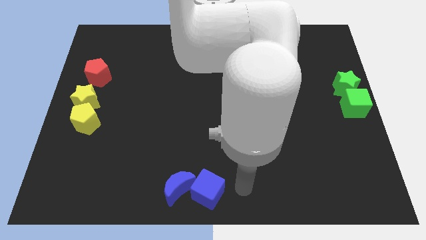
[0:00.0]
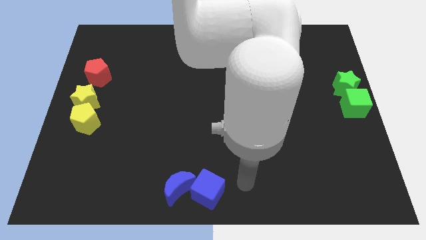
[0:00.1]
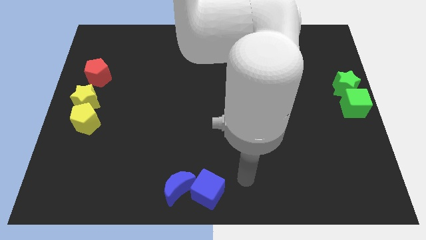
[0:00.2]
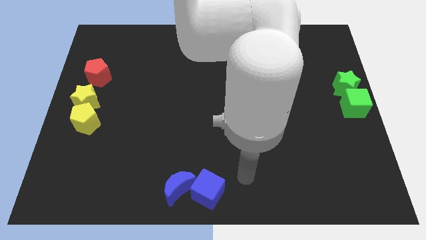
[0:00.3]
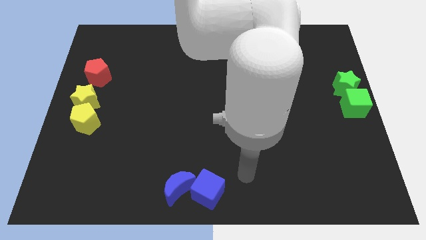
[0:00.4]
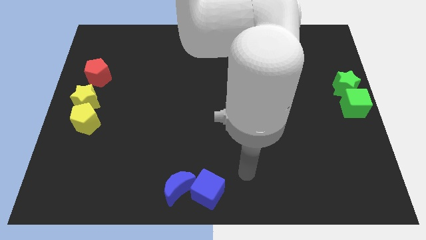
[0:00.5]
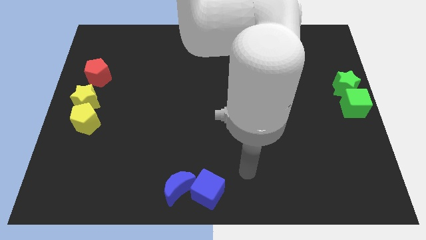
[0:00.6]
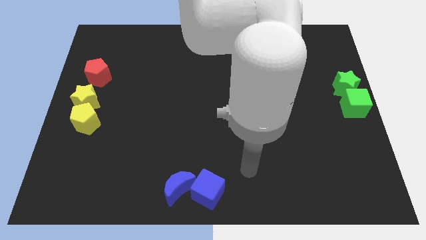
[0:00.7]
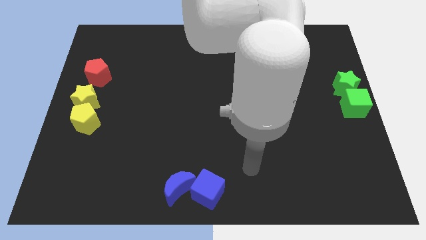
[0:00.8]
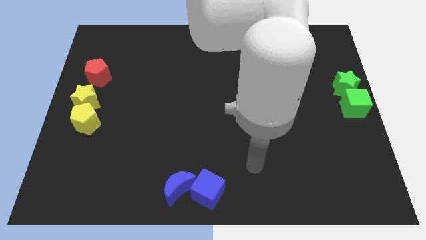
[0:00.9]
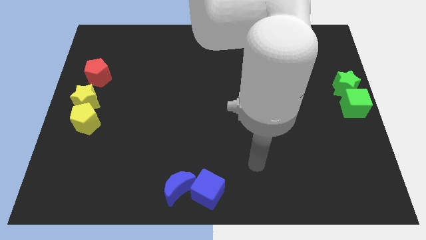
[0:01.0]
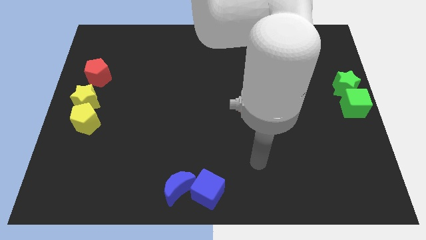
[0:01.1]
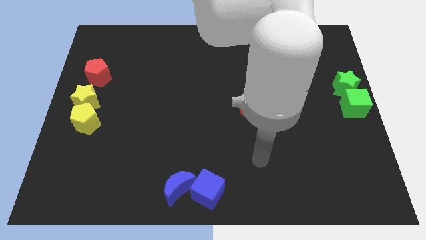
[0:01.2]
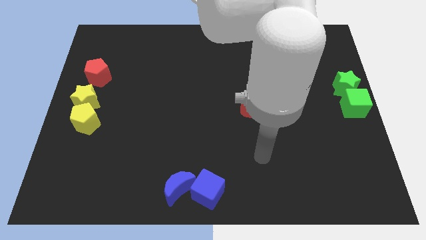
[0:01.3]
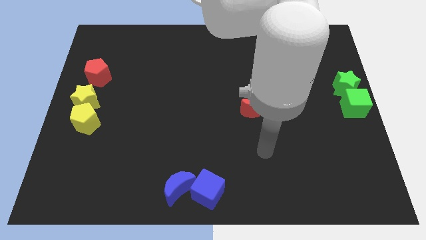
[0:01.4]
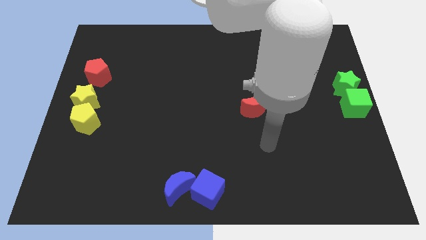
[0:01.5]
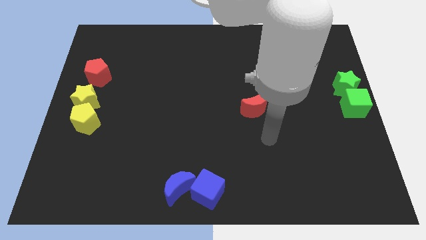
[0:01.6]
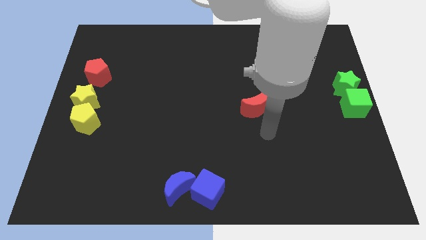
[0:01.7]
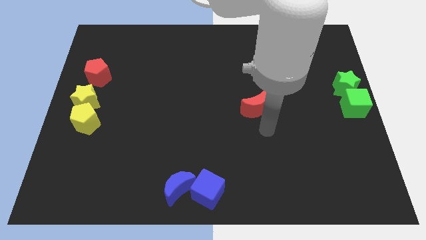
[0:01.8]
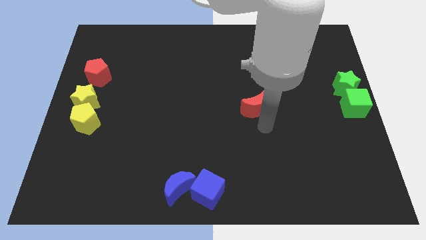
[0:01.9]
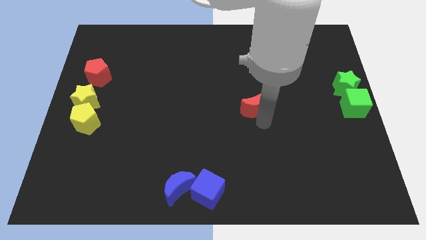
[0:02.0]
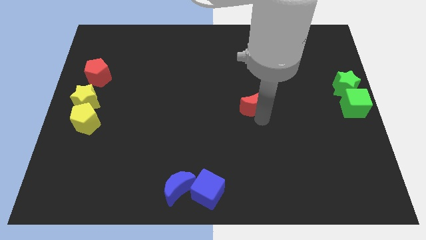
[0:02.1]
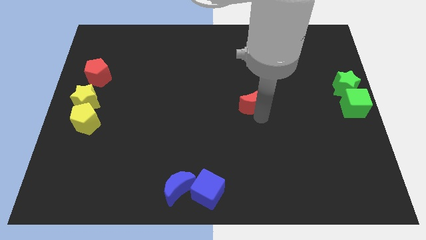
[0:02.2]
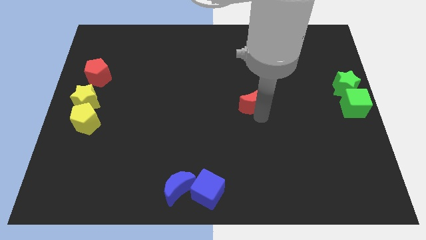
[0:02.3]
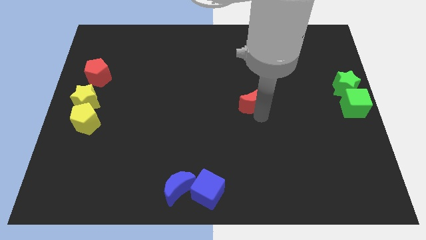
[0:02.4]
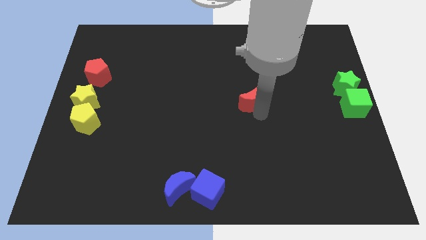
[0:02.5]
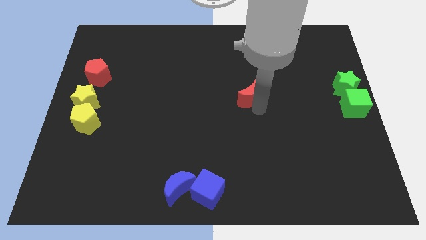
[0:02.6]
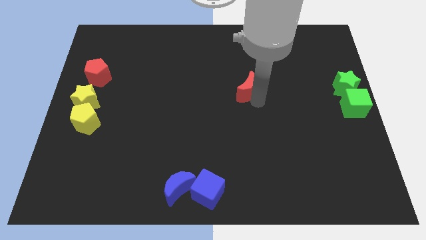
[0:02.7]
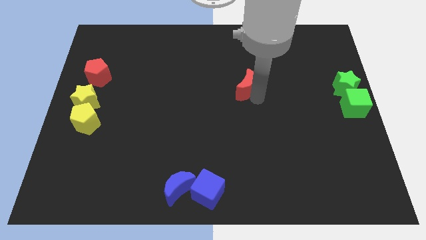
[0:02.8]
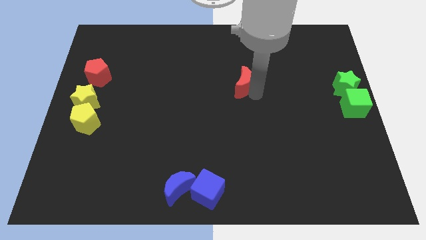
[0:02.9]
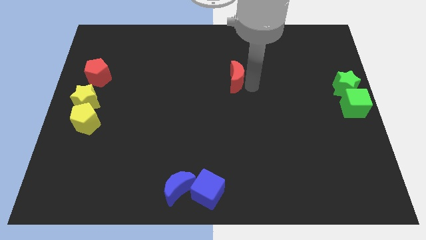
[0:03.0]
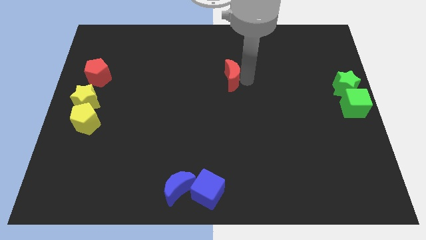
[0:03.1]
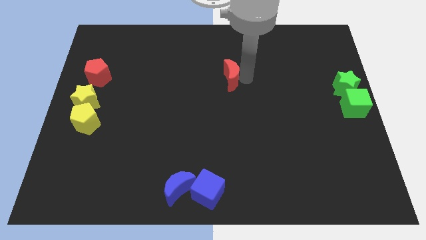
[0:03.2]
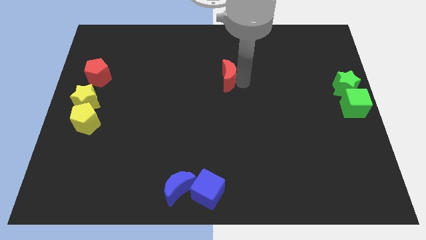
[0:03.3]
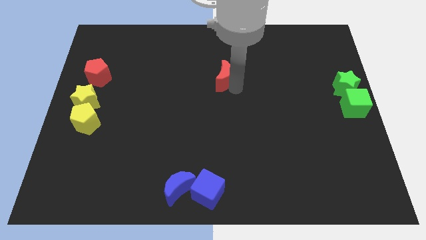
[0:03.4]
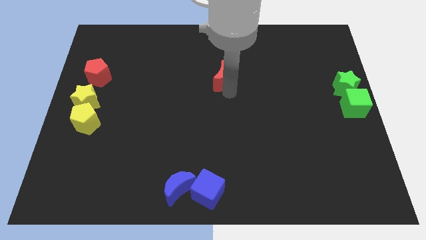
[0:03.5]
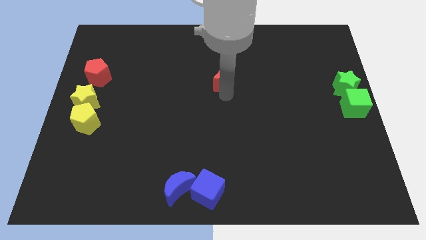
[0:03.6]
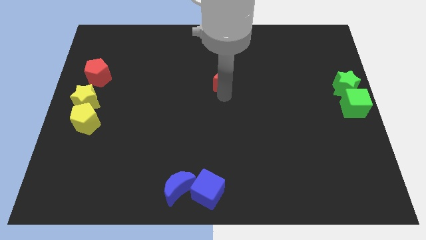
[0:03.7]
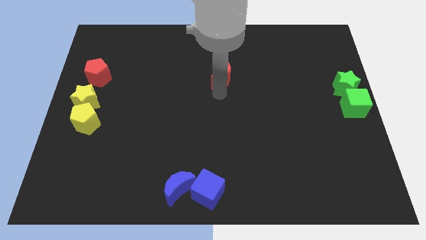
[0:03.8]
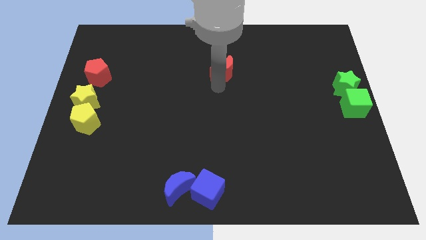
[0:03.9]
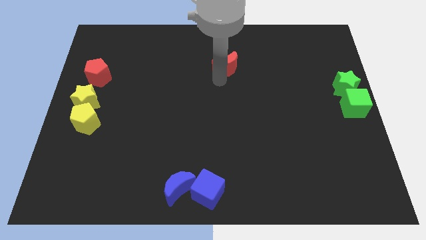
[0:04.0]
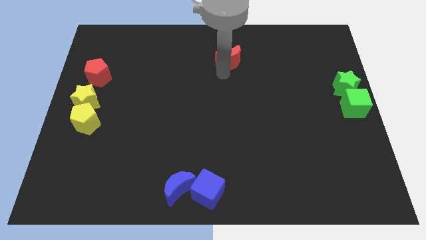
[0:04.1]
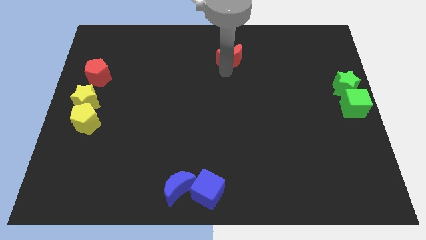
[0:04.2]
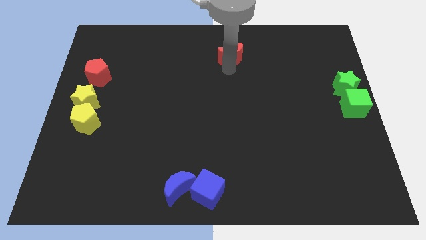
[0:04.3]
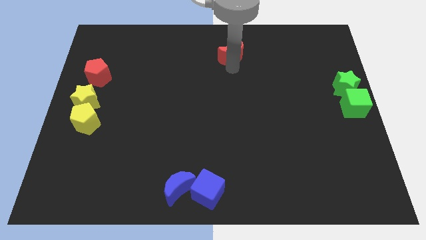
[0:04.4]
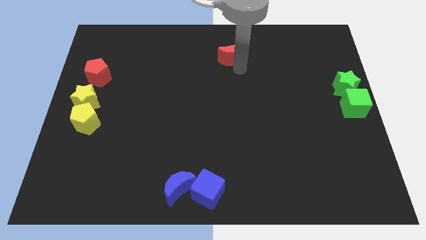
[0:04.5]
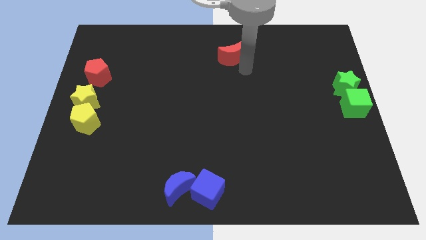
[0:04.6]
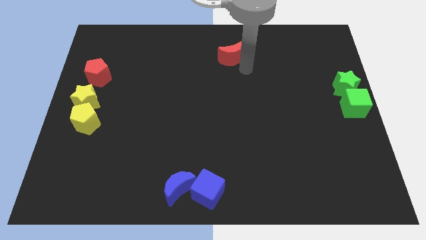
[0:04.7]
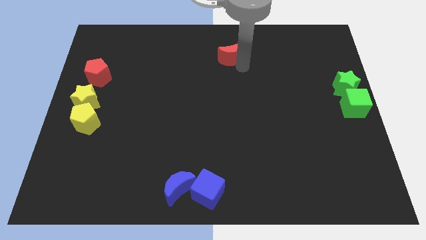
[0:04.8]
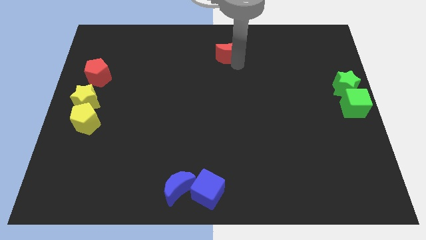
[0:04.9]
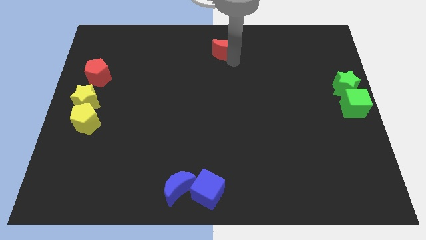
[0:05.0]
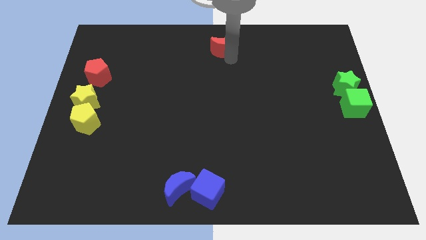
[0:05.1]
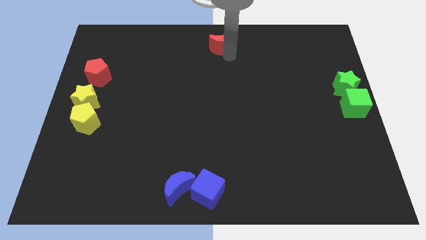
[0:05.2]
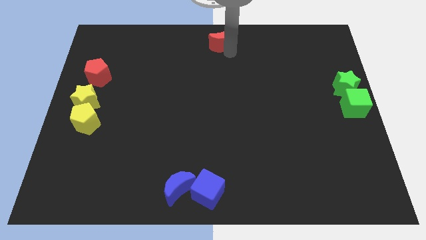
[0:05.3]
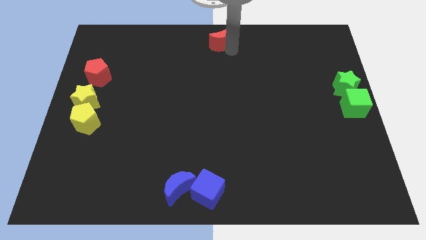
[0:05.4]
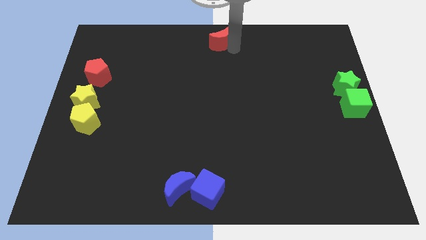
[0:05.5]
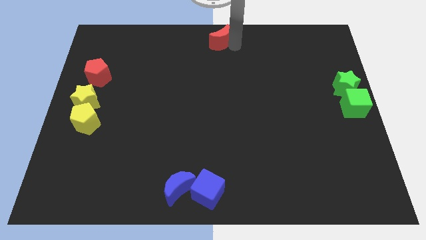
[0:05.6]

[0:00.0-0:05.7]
move the red crescent to the top center of the board

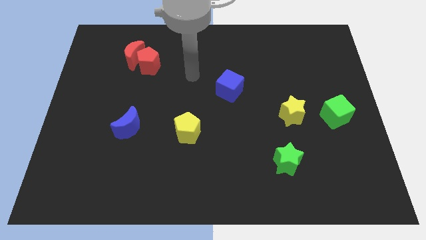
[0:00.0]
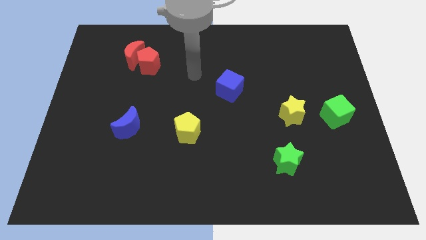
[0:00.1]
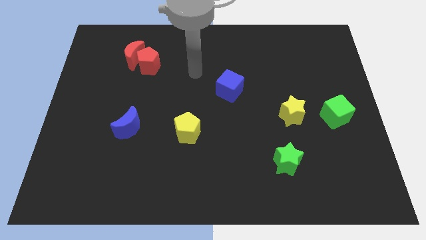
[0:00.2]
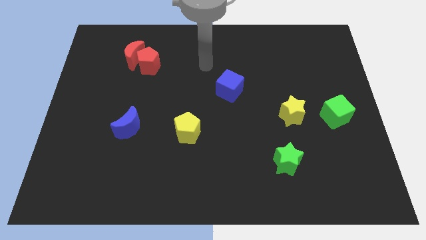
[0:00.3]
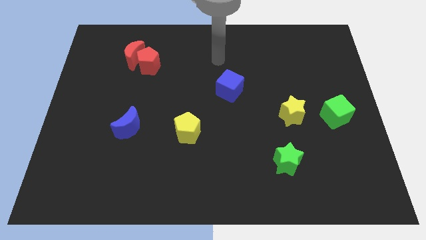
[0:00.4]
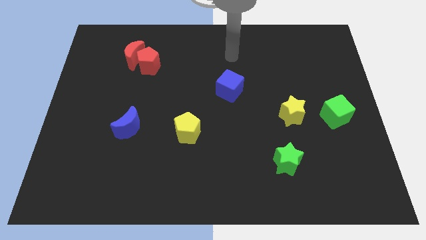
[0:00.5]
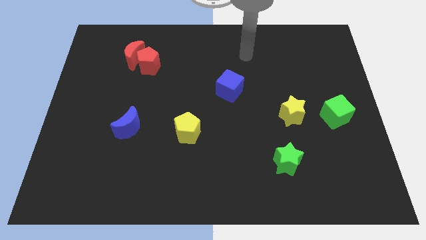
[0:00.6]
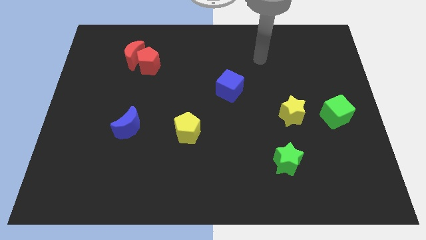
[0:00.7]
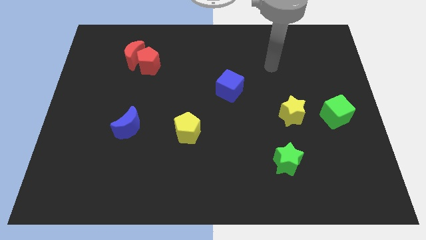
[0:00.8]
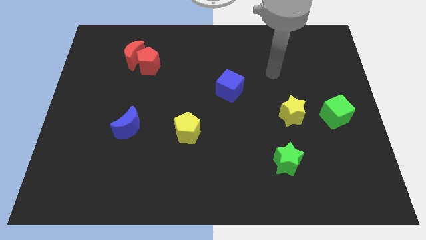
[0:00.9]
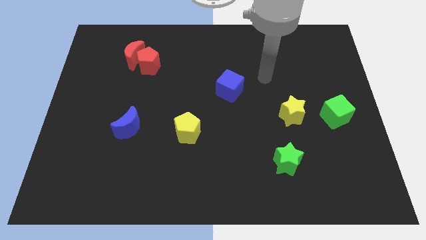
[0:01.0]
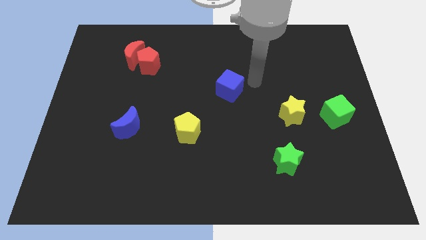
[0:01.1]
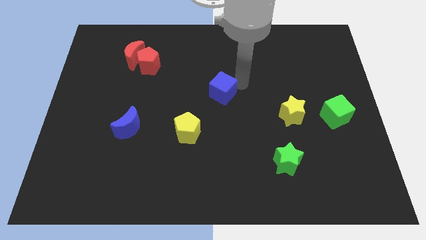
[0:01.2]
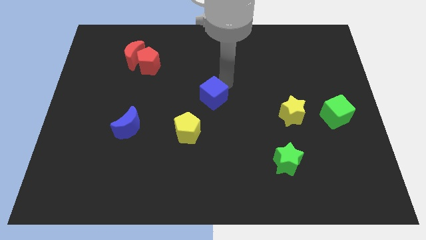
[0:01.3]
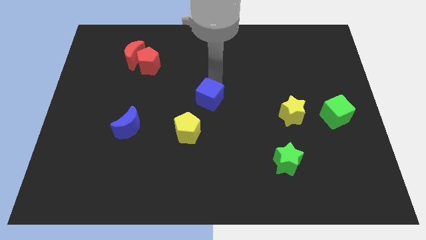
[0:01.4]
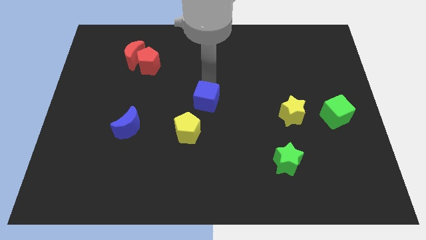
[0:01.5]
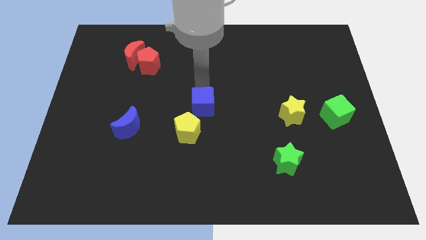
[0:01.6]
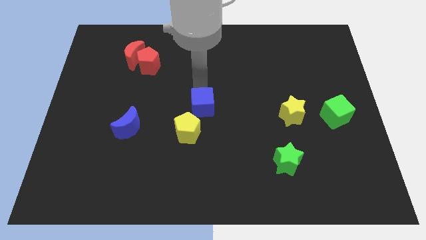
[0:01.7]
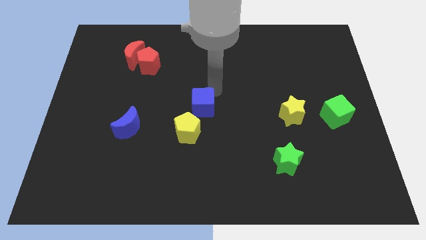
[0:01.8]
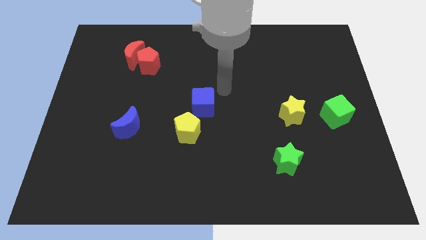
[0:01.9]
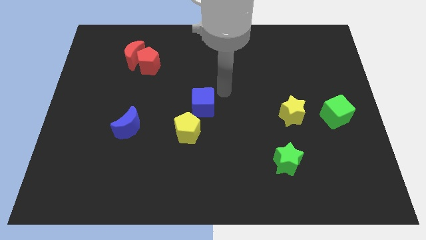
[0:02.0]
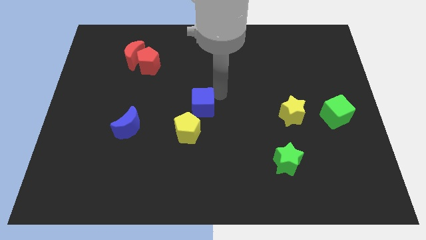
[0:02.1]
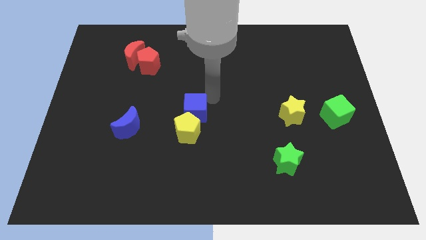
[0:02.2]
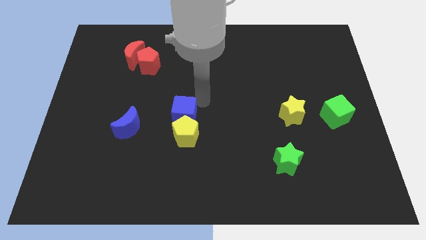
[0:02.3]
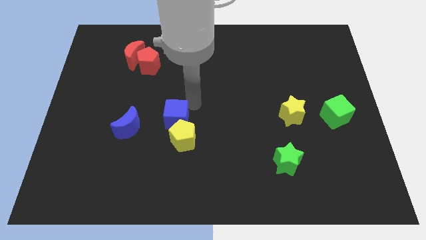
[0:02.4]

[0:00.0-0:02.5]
place the blue cube on top of the yellow pentagon

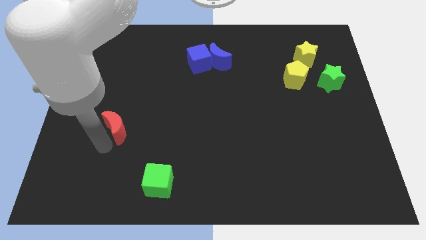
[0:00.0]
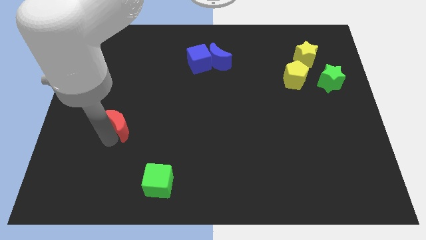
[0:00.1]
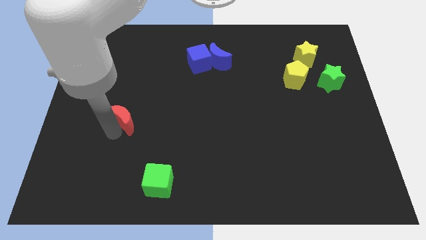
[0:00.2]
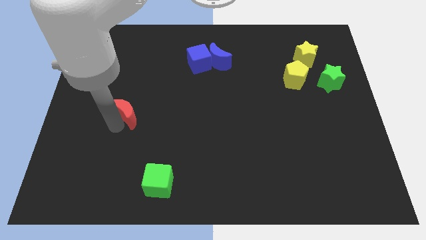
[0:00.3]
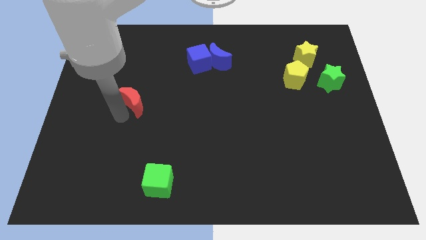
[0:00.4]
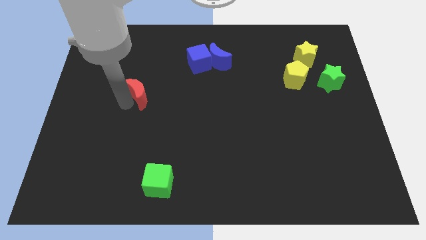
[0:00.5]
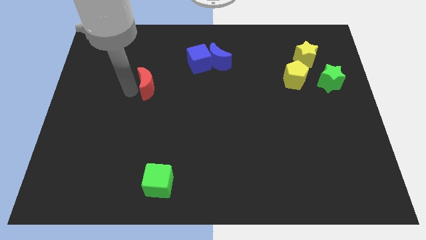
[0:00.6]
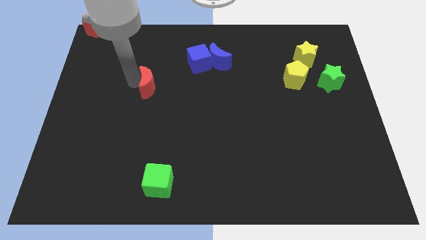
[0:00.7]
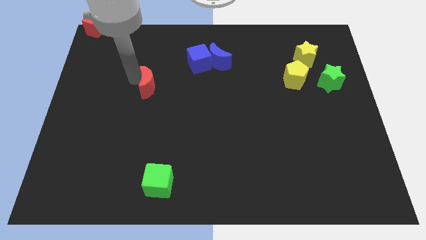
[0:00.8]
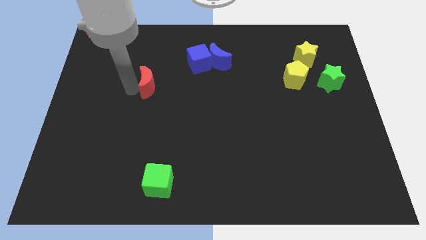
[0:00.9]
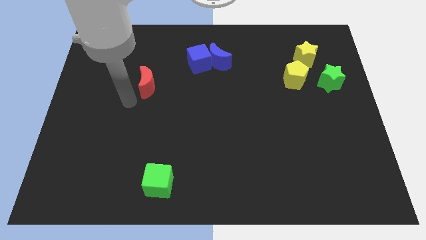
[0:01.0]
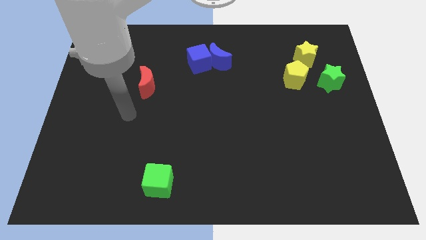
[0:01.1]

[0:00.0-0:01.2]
slide the red moon towards the blue cube
